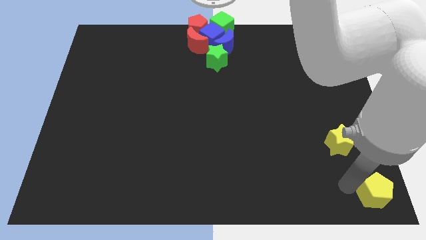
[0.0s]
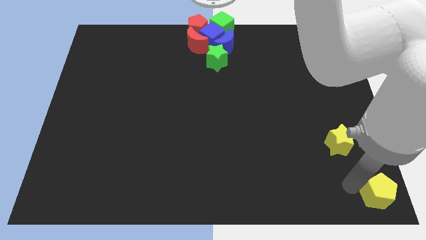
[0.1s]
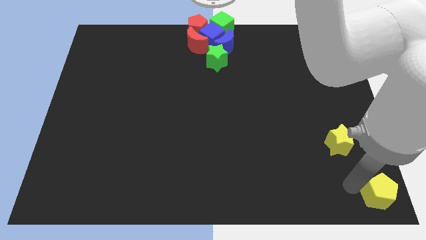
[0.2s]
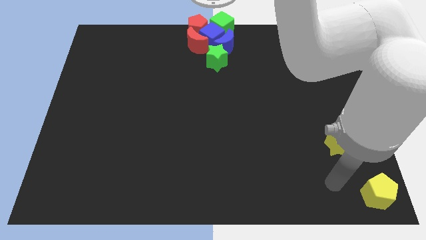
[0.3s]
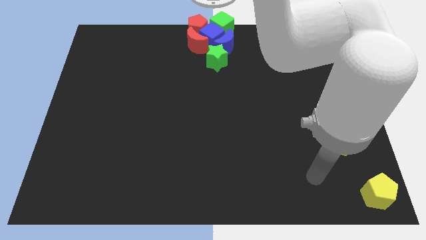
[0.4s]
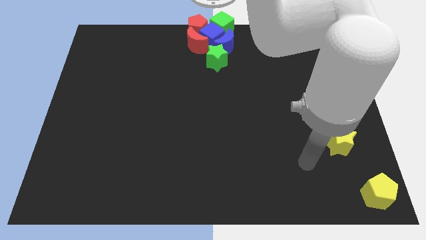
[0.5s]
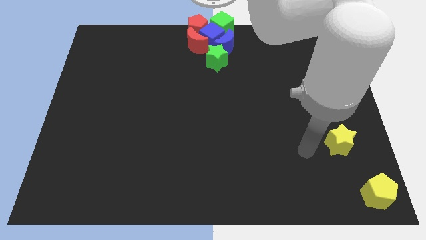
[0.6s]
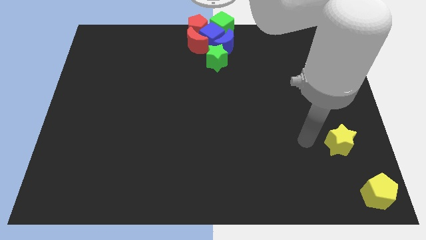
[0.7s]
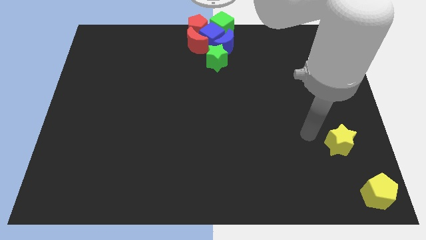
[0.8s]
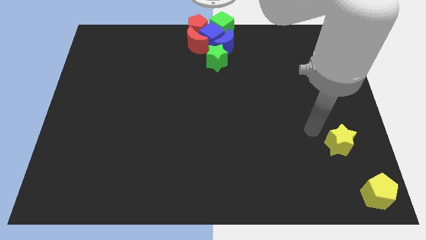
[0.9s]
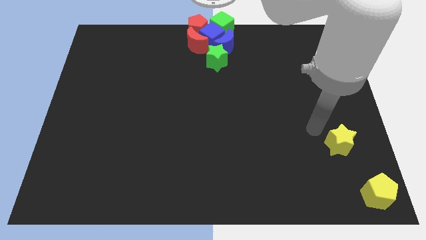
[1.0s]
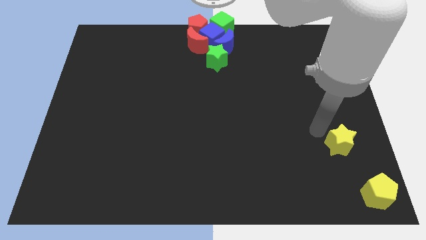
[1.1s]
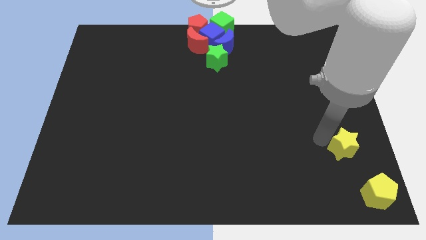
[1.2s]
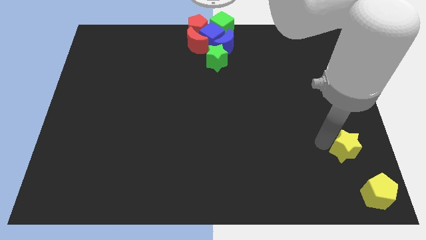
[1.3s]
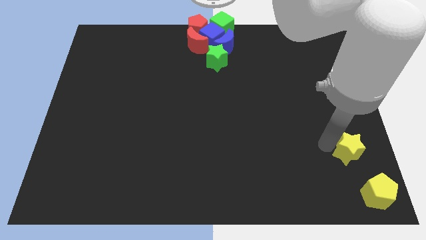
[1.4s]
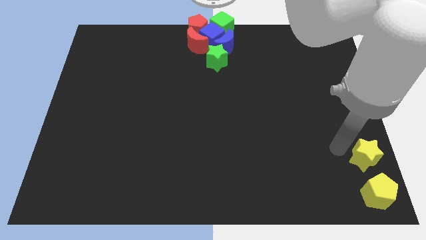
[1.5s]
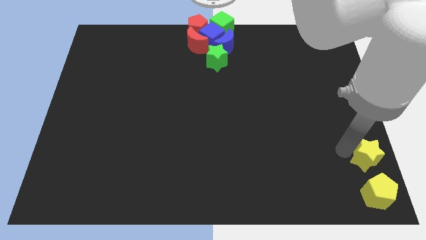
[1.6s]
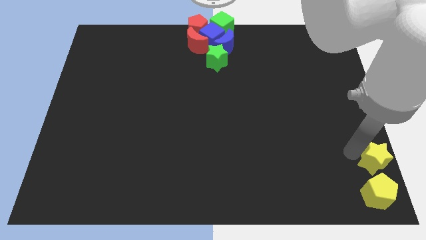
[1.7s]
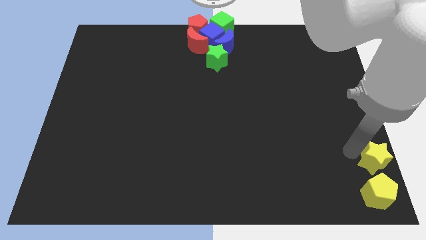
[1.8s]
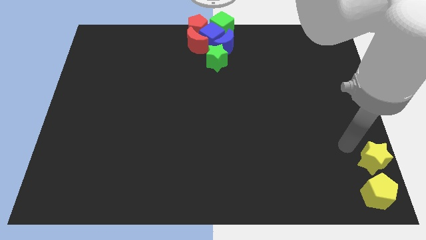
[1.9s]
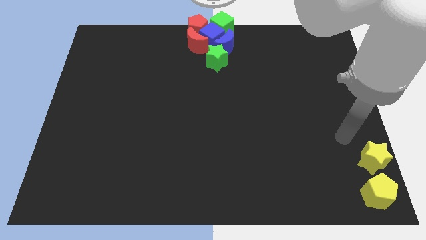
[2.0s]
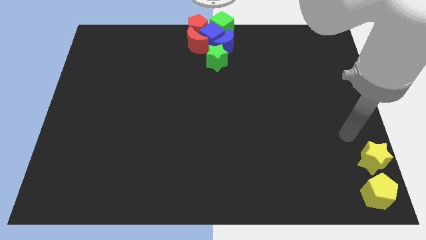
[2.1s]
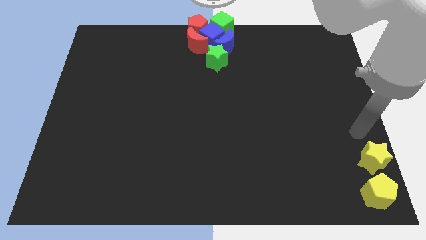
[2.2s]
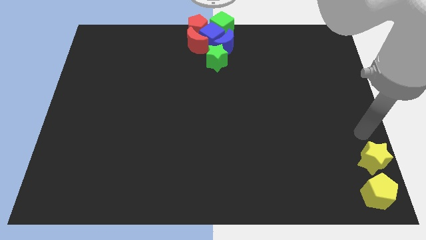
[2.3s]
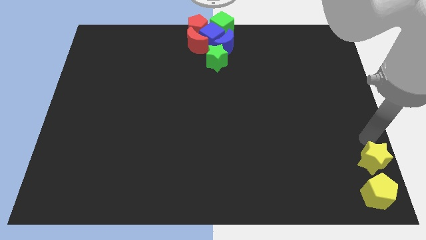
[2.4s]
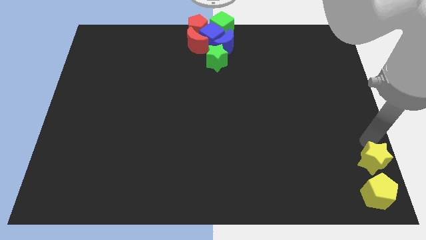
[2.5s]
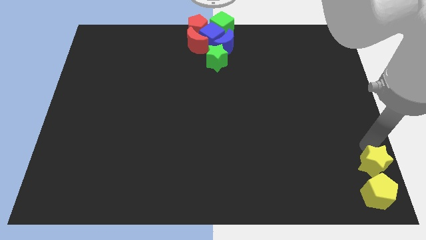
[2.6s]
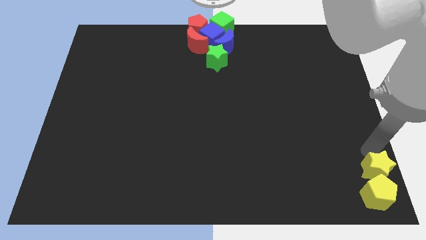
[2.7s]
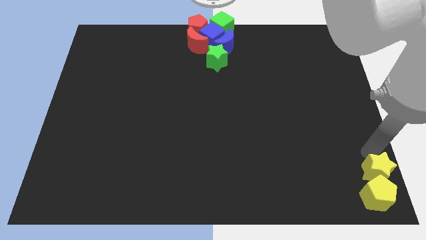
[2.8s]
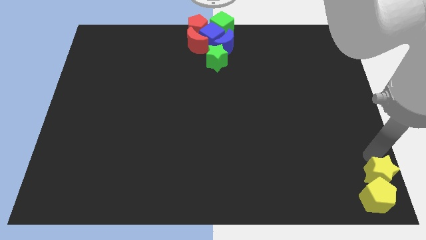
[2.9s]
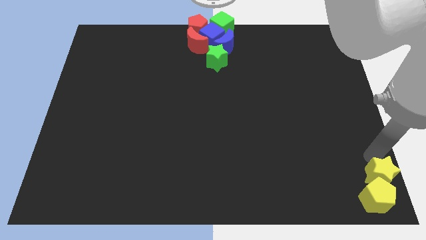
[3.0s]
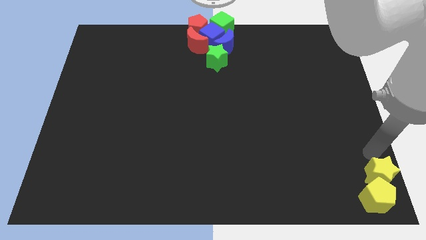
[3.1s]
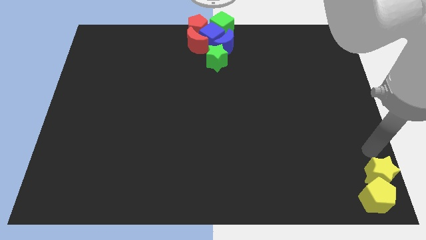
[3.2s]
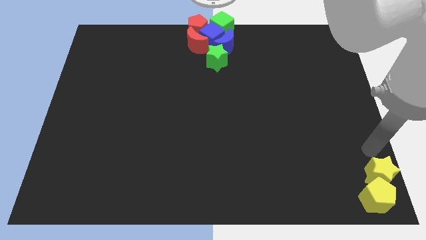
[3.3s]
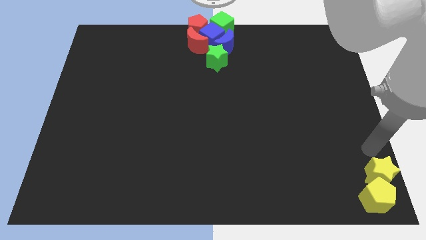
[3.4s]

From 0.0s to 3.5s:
move the yellow star to the bottom right

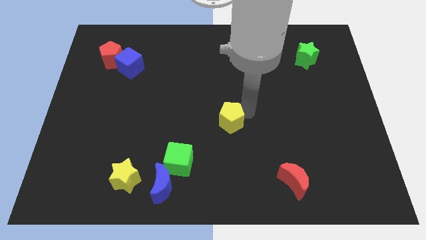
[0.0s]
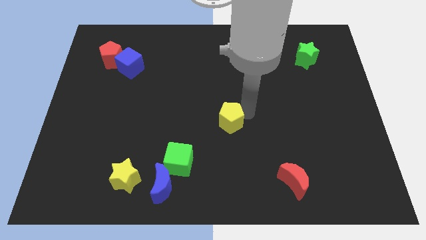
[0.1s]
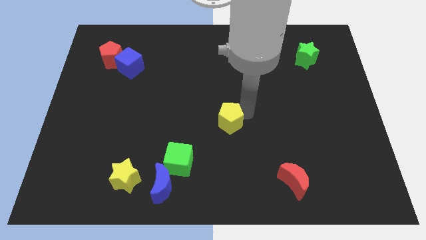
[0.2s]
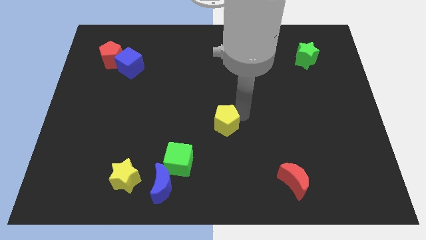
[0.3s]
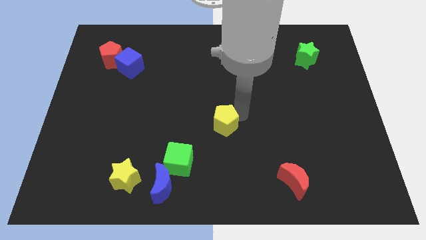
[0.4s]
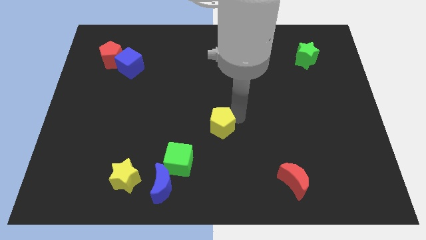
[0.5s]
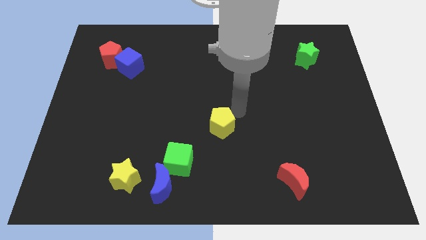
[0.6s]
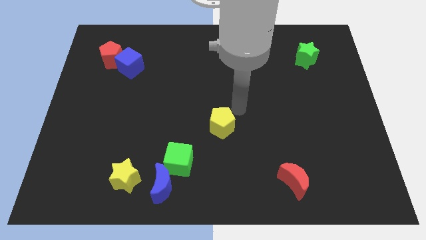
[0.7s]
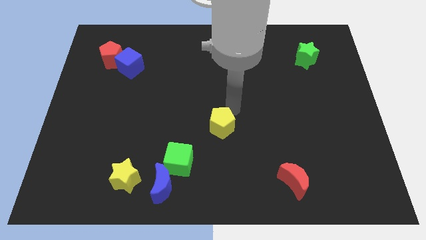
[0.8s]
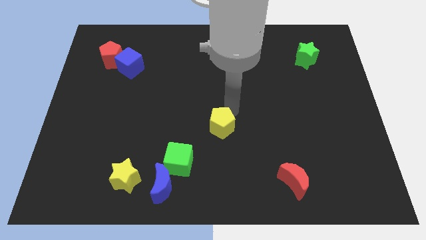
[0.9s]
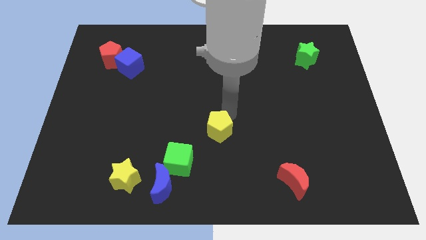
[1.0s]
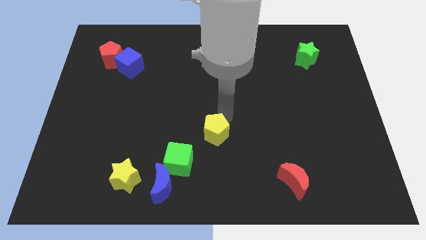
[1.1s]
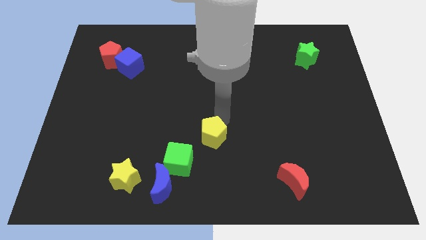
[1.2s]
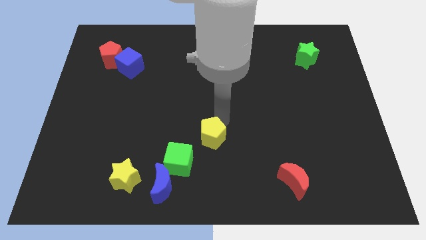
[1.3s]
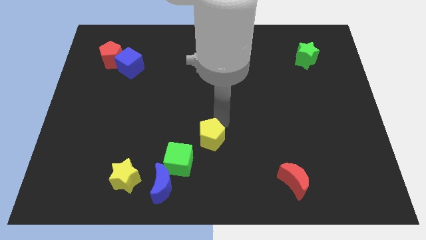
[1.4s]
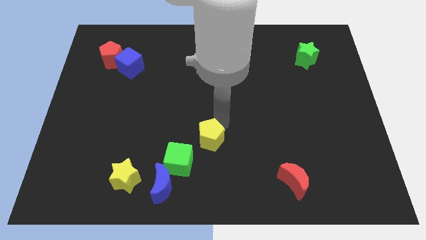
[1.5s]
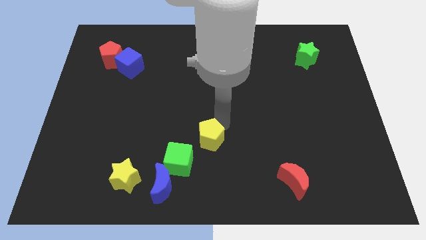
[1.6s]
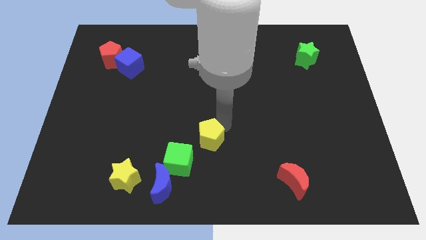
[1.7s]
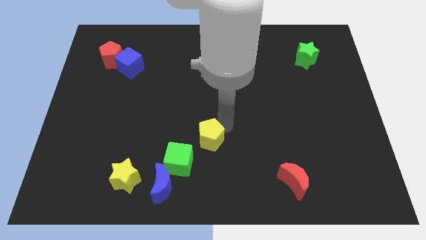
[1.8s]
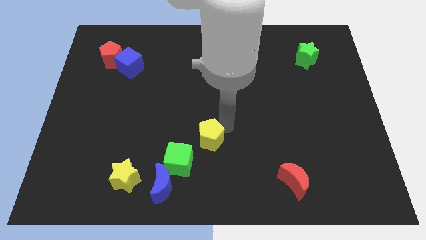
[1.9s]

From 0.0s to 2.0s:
slide the yellow pentagon close to the green cube

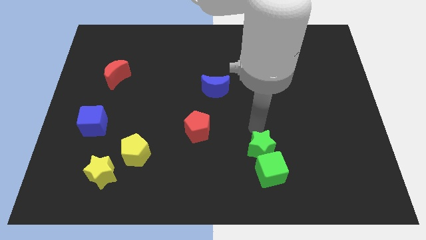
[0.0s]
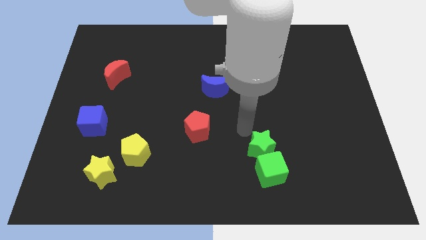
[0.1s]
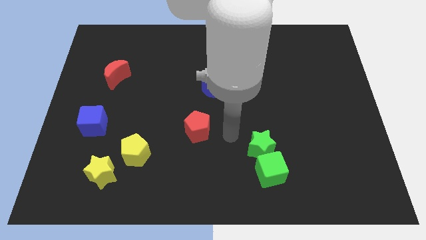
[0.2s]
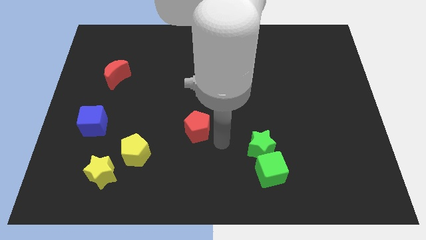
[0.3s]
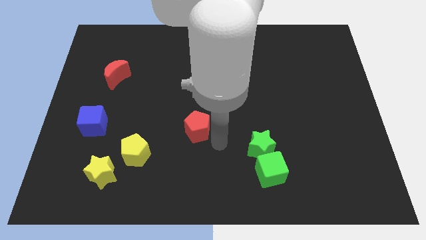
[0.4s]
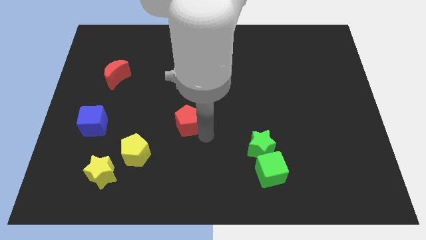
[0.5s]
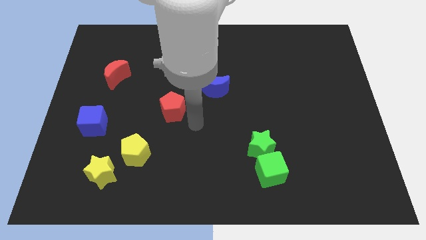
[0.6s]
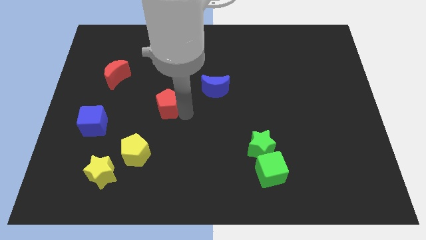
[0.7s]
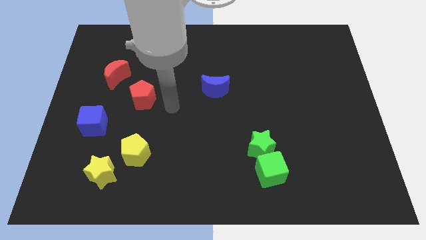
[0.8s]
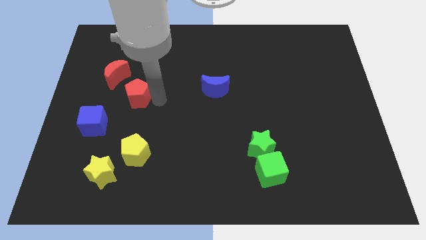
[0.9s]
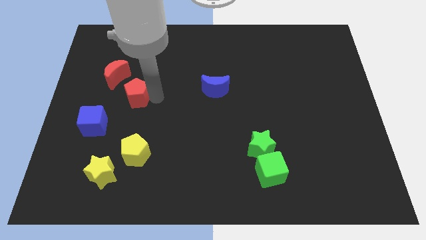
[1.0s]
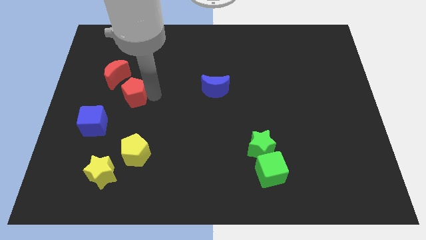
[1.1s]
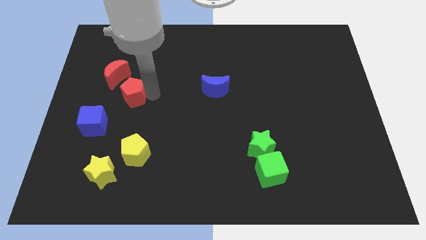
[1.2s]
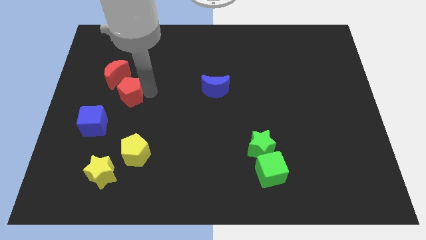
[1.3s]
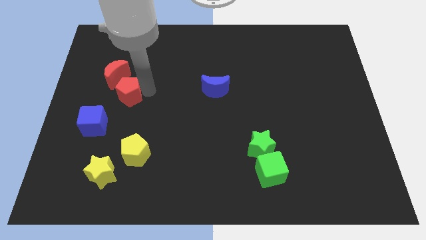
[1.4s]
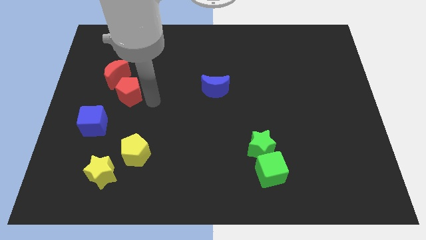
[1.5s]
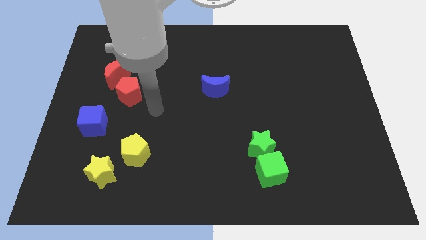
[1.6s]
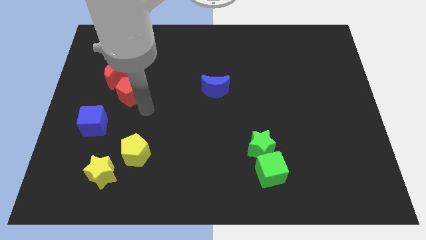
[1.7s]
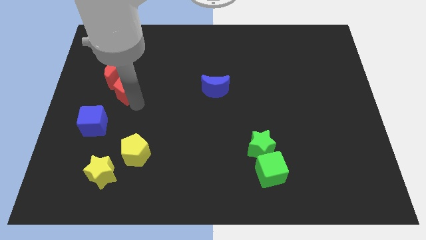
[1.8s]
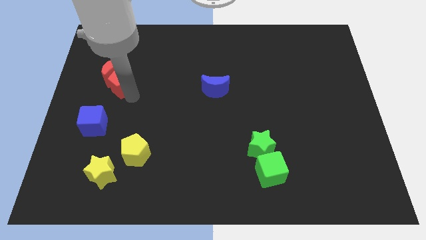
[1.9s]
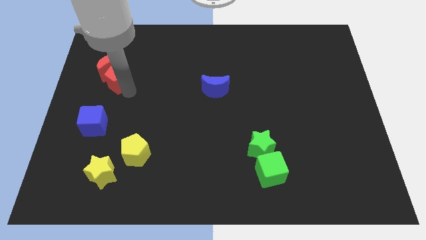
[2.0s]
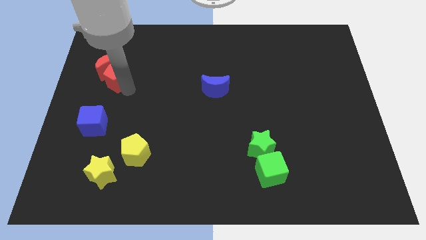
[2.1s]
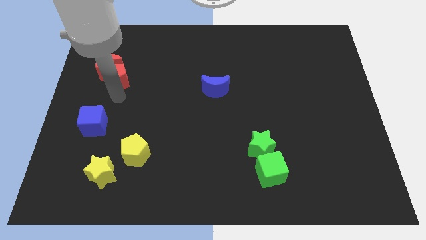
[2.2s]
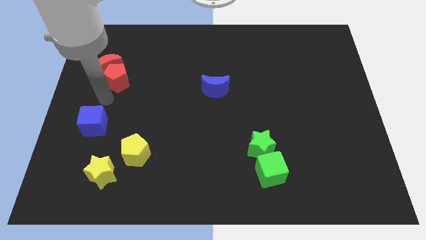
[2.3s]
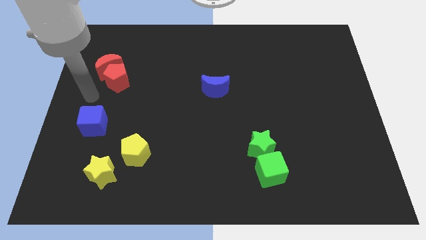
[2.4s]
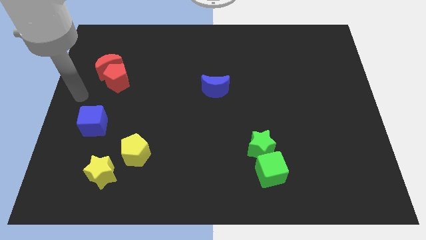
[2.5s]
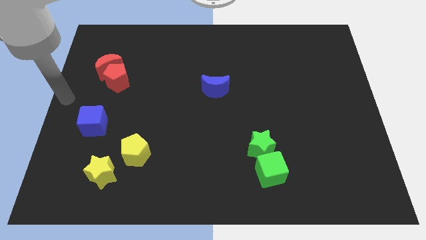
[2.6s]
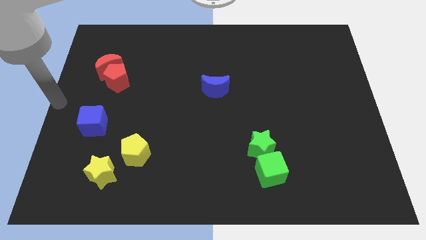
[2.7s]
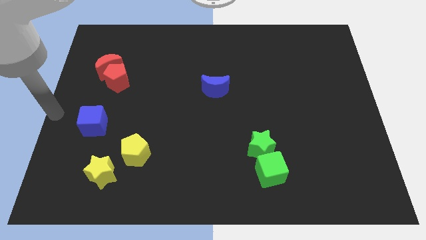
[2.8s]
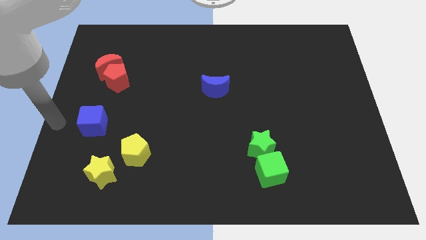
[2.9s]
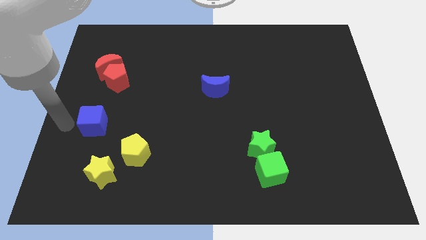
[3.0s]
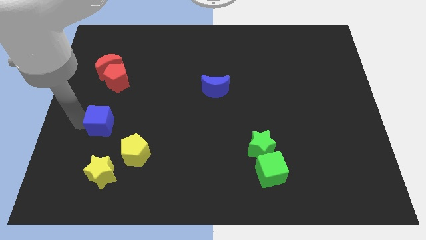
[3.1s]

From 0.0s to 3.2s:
push the red pentagon into the red crescent

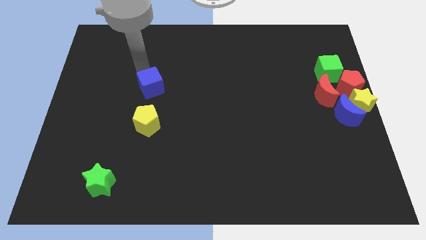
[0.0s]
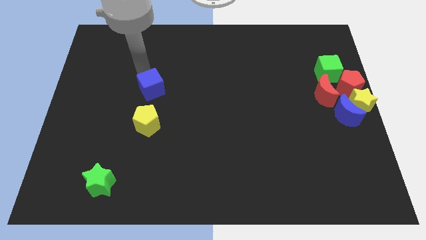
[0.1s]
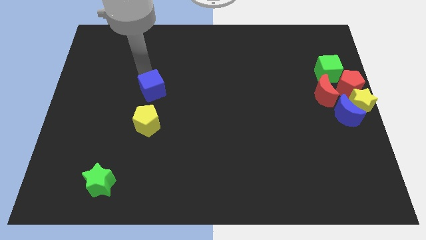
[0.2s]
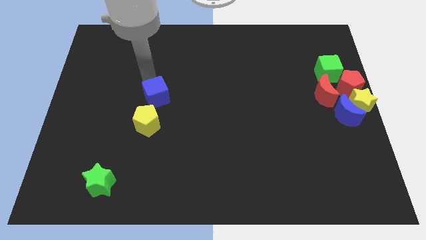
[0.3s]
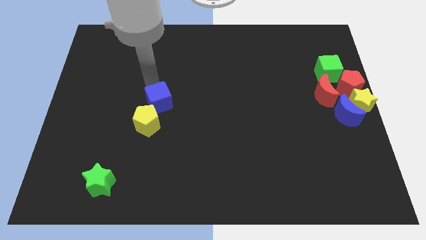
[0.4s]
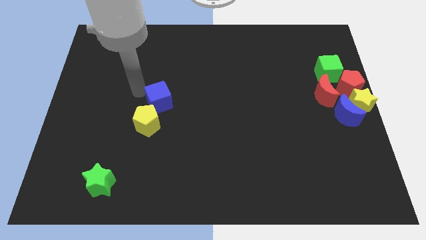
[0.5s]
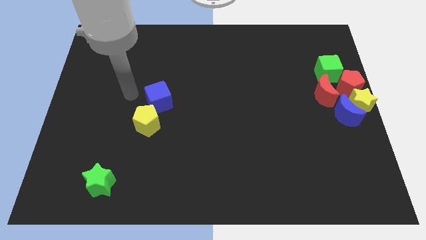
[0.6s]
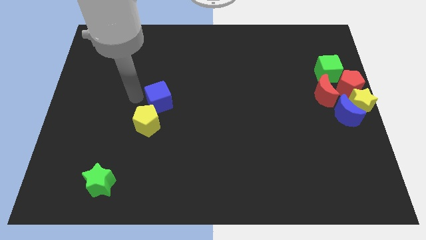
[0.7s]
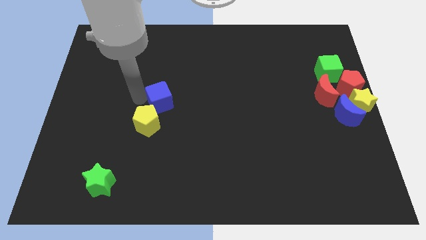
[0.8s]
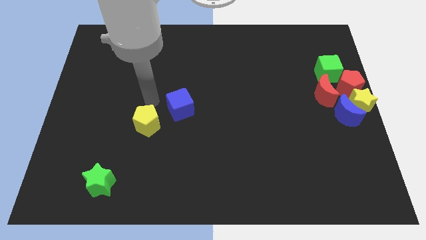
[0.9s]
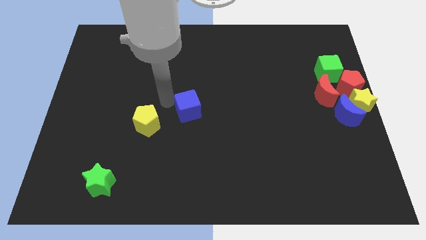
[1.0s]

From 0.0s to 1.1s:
move blue cube right beside the yellow pentagon
